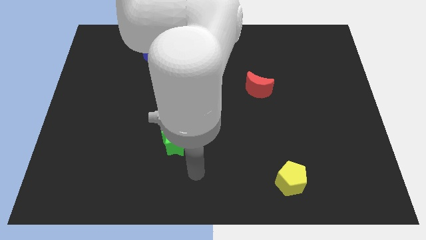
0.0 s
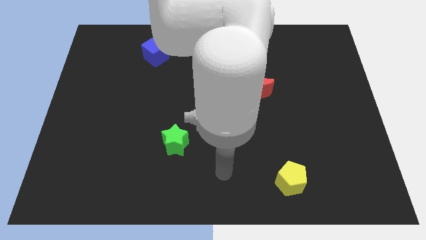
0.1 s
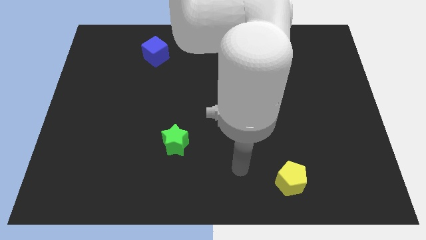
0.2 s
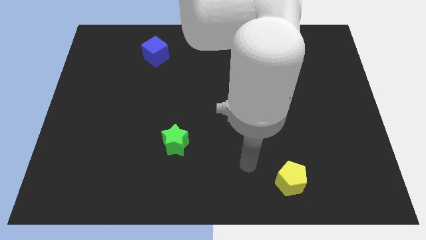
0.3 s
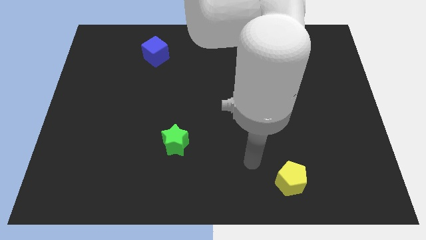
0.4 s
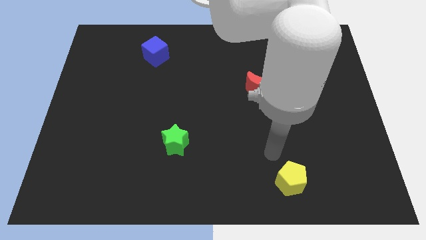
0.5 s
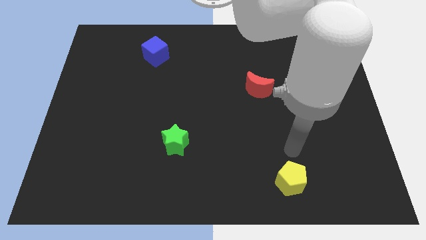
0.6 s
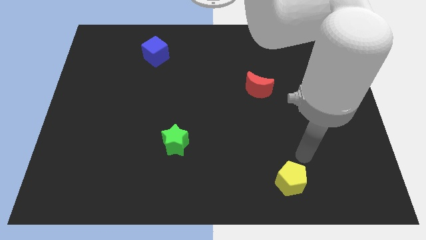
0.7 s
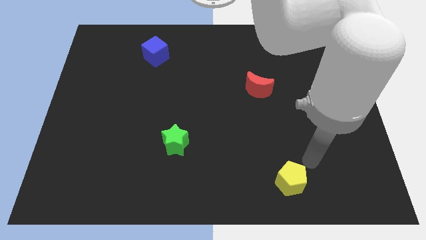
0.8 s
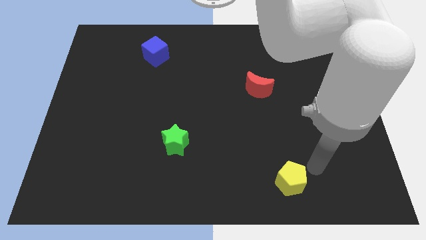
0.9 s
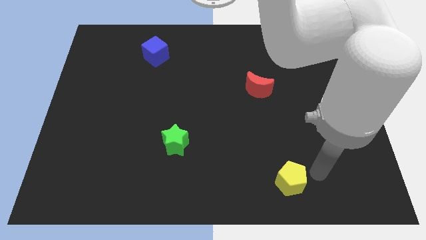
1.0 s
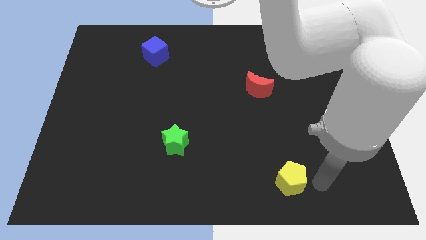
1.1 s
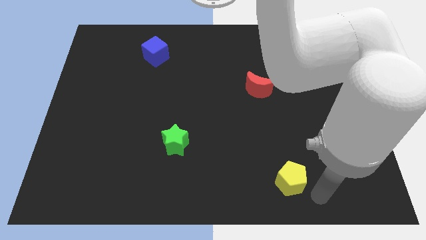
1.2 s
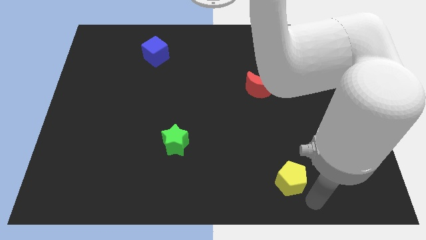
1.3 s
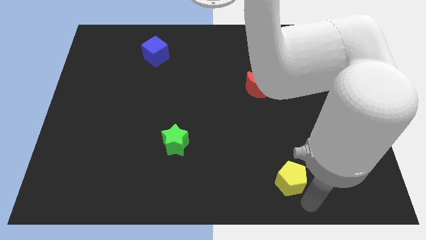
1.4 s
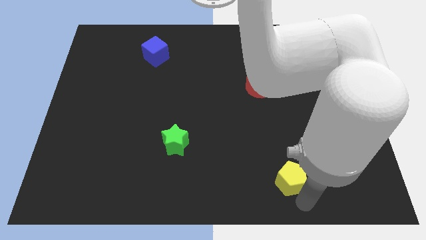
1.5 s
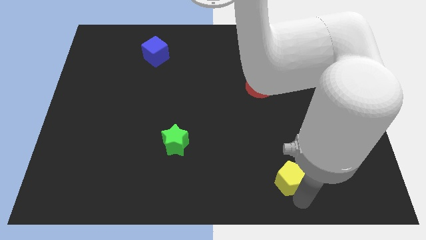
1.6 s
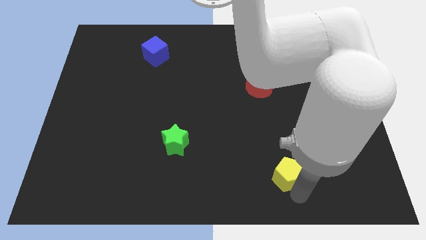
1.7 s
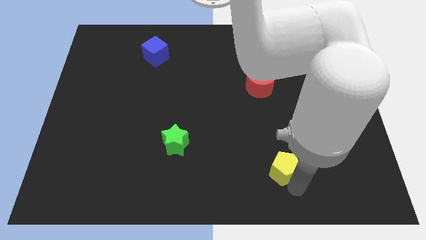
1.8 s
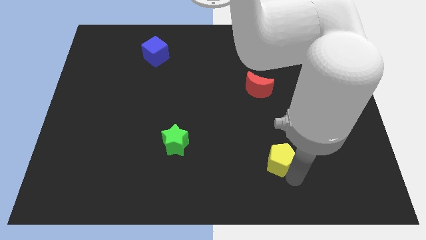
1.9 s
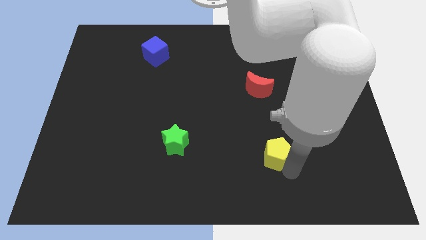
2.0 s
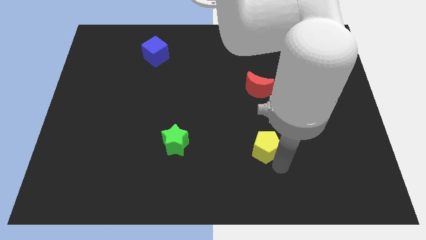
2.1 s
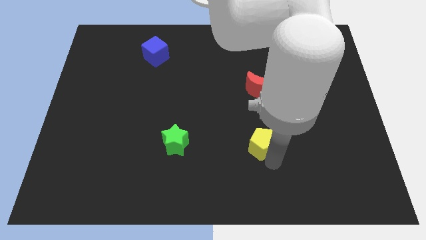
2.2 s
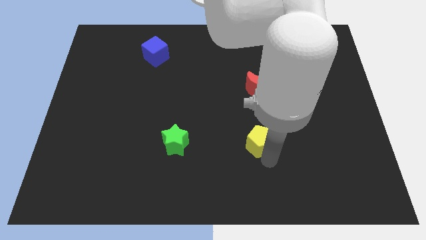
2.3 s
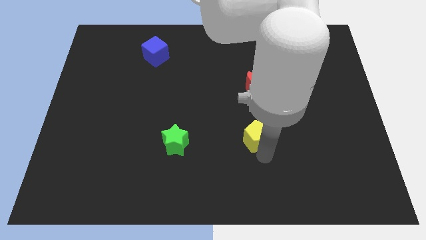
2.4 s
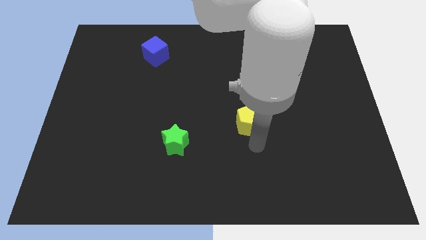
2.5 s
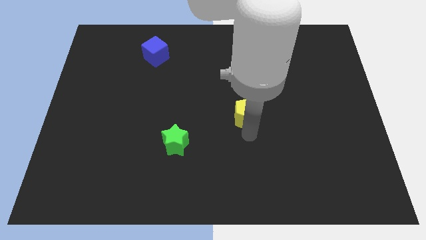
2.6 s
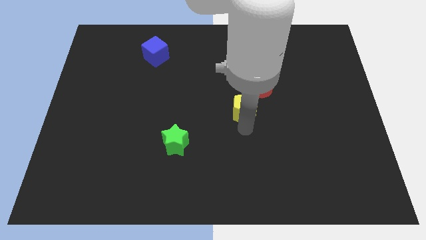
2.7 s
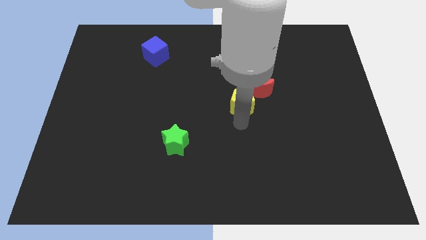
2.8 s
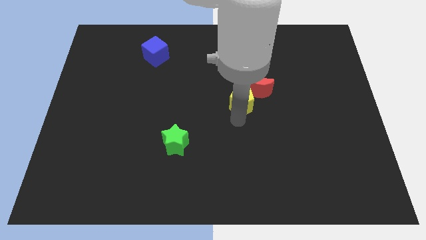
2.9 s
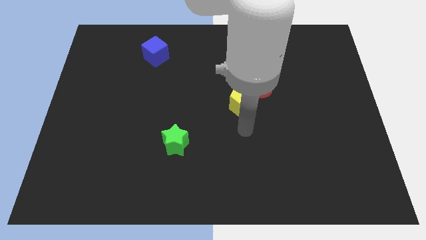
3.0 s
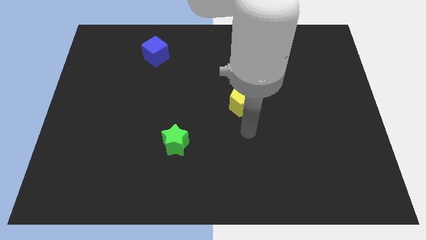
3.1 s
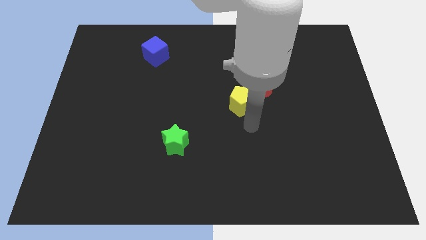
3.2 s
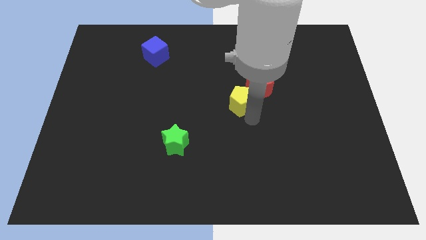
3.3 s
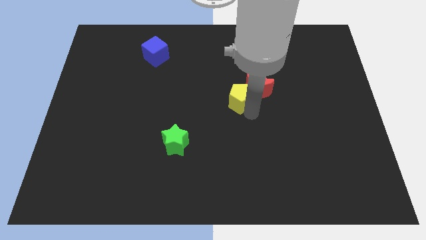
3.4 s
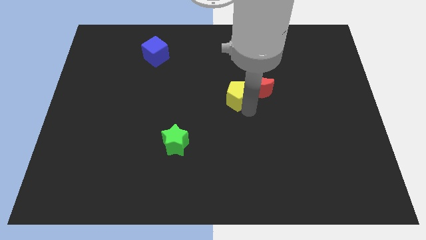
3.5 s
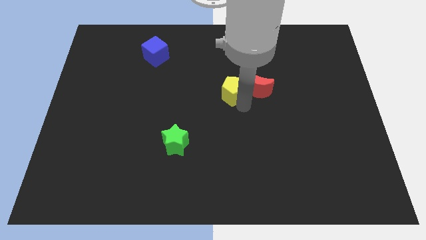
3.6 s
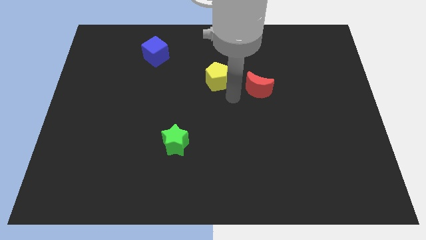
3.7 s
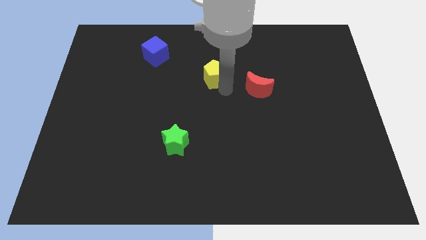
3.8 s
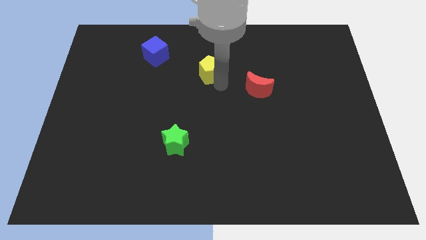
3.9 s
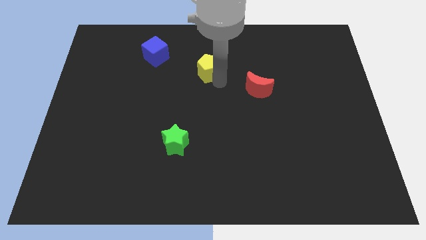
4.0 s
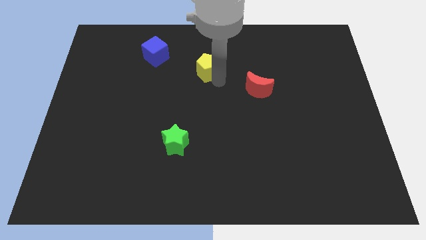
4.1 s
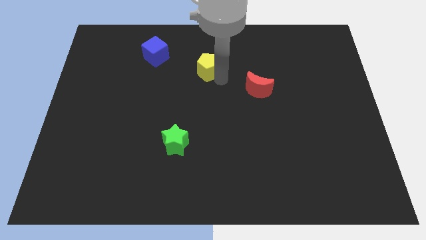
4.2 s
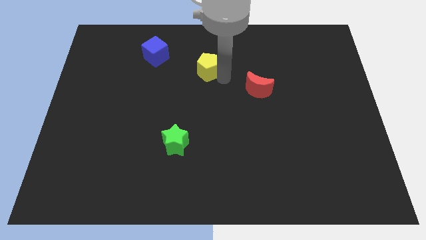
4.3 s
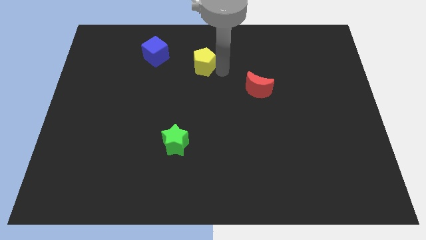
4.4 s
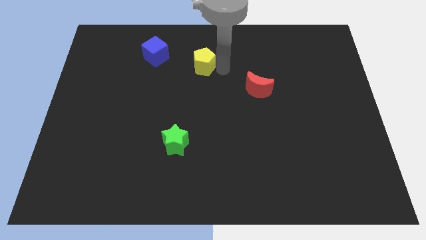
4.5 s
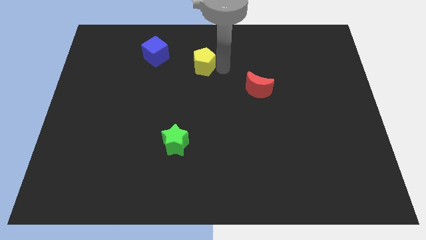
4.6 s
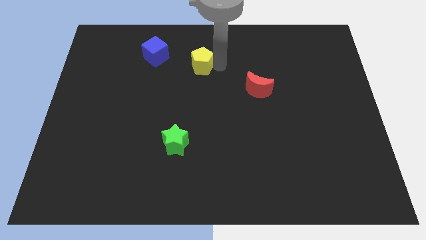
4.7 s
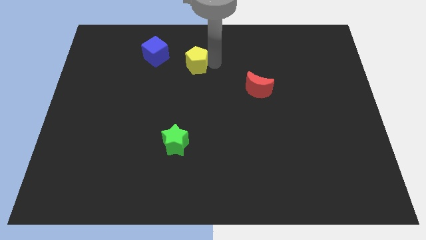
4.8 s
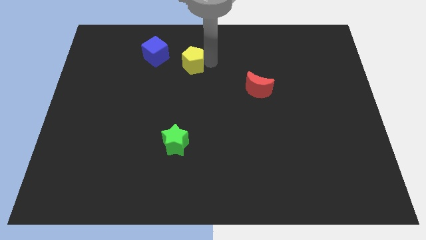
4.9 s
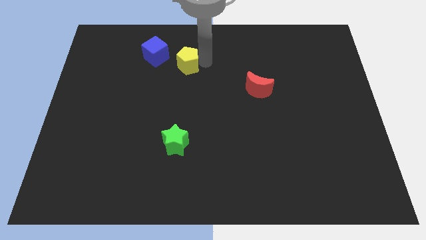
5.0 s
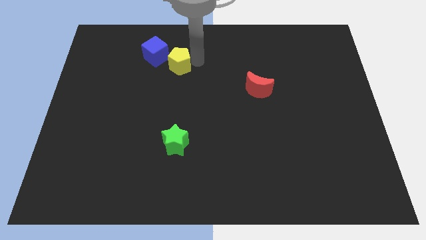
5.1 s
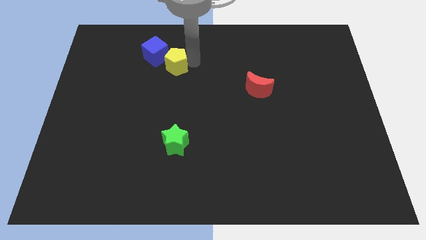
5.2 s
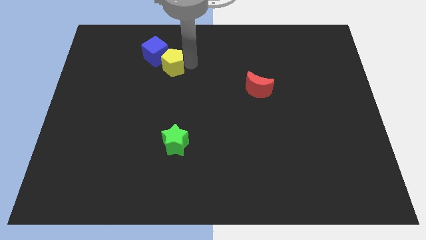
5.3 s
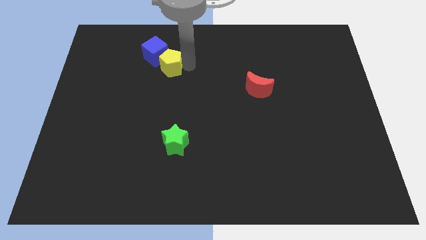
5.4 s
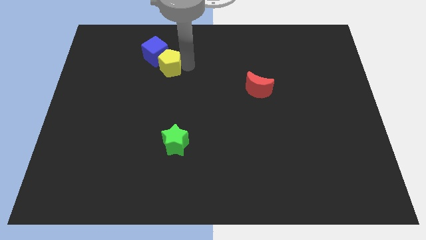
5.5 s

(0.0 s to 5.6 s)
put the yellow block next to the blue cube

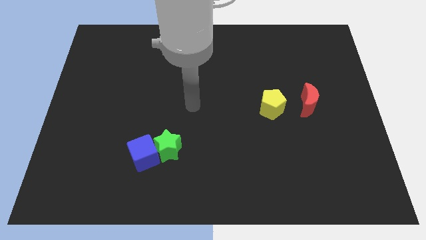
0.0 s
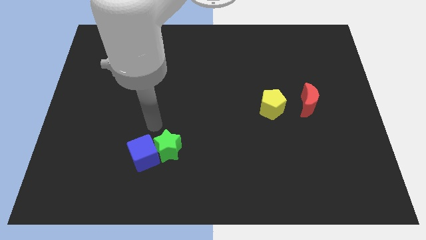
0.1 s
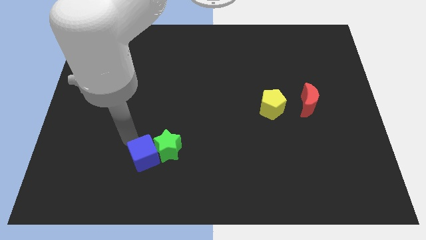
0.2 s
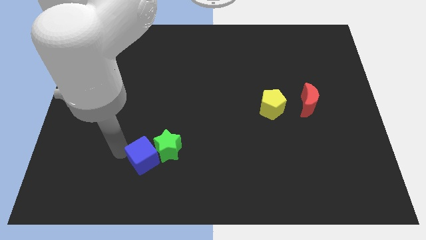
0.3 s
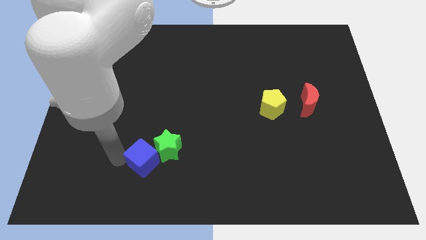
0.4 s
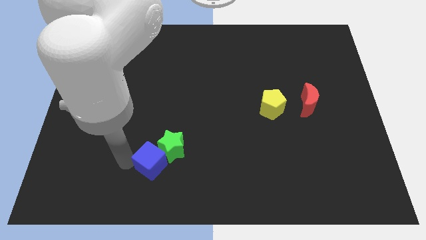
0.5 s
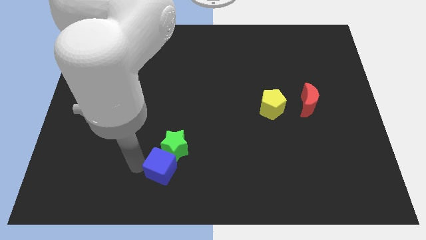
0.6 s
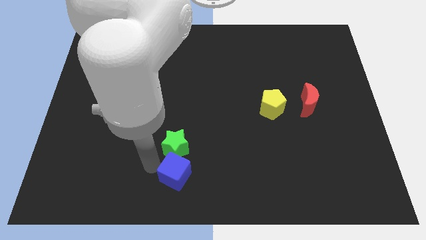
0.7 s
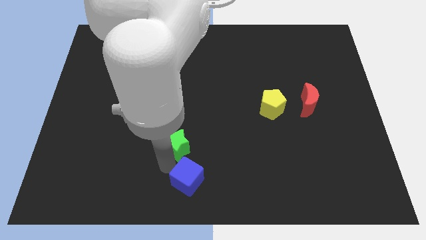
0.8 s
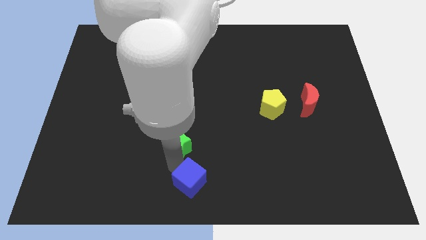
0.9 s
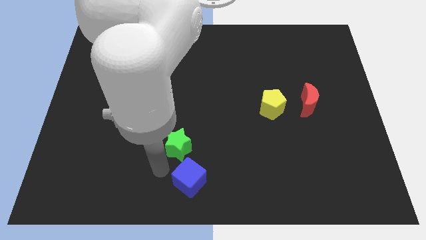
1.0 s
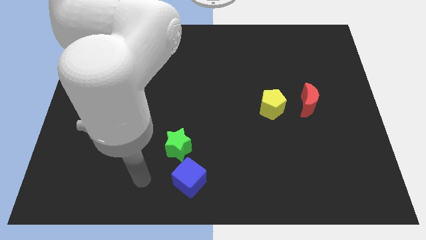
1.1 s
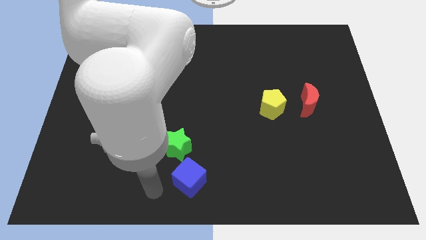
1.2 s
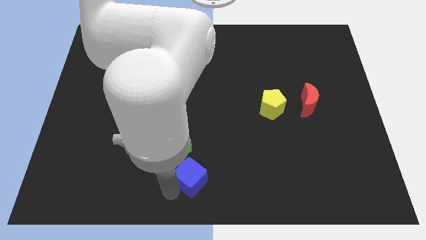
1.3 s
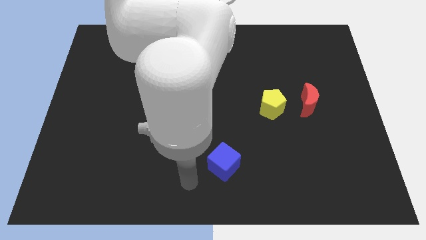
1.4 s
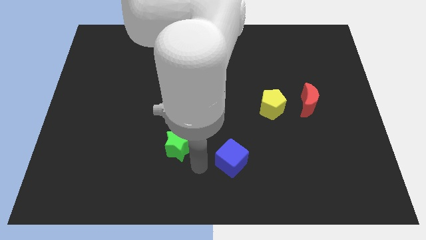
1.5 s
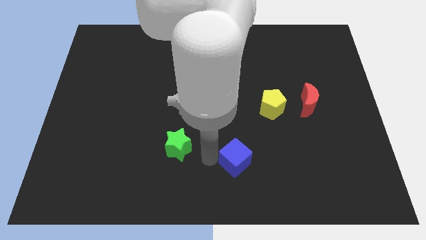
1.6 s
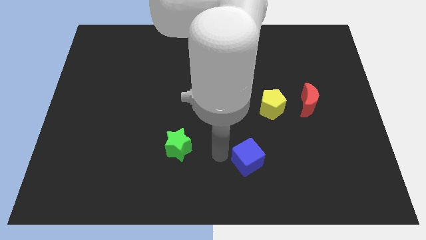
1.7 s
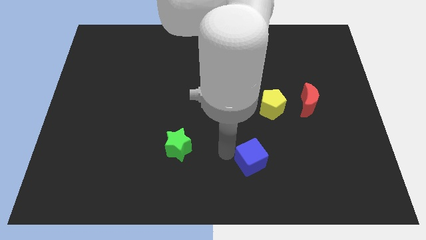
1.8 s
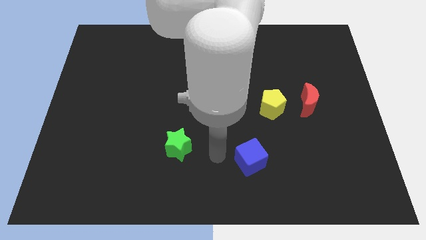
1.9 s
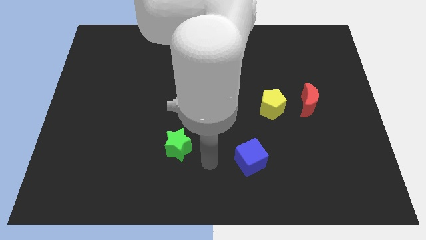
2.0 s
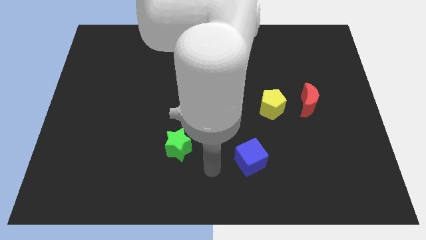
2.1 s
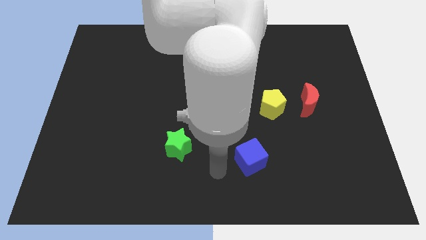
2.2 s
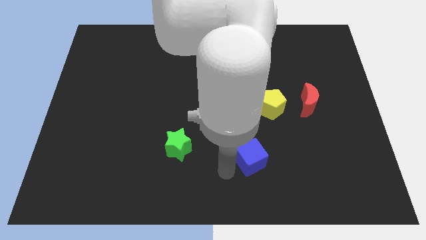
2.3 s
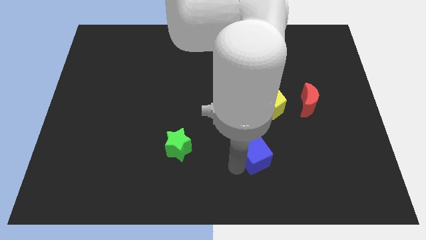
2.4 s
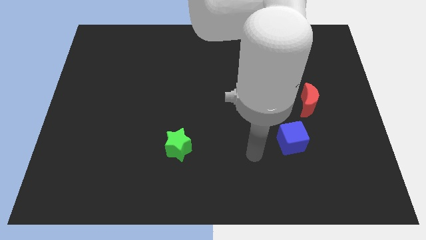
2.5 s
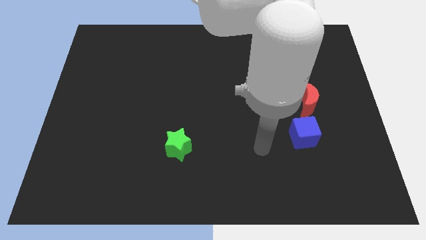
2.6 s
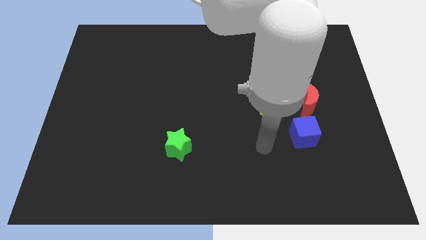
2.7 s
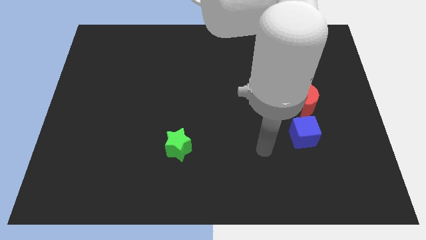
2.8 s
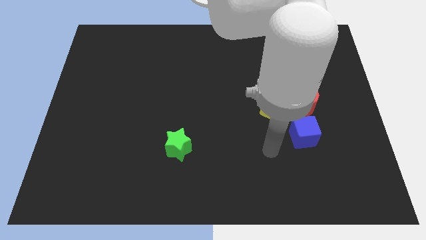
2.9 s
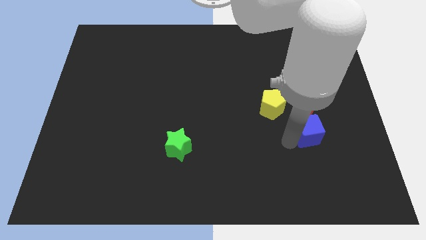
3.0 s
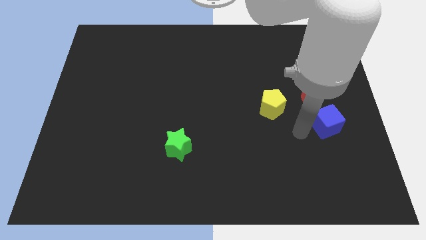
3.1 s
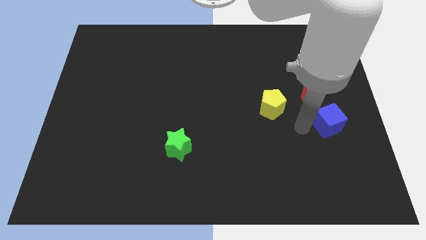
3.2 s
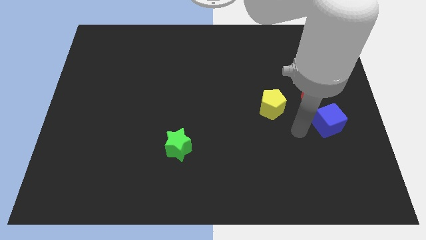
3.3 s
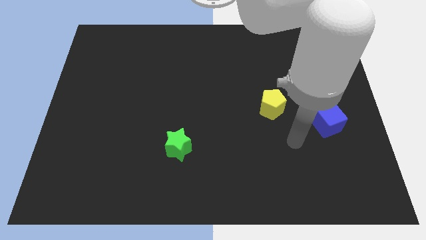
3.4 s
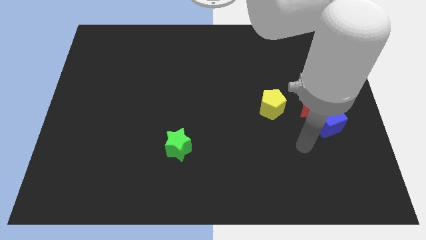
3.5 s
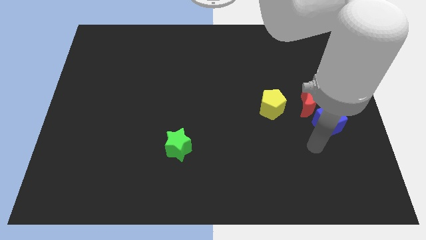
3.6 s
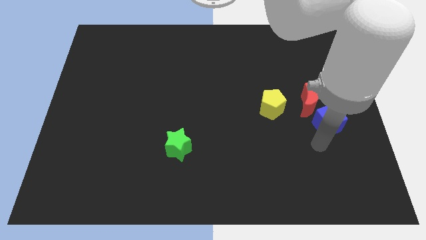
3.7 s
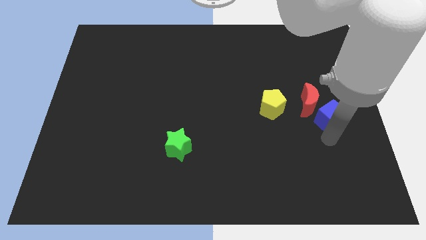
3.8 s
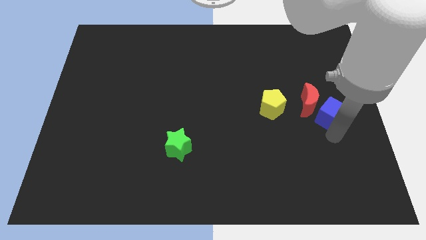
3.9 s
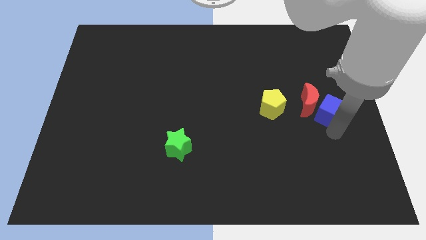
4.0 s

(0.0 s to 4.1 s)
push the blue cube close to the red moon
